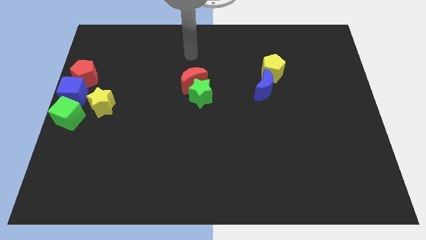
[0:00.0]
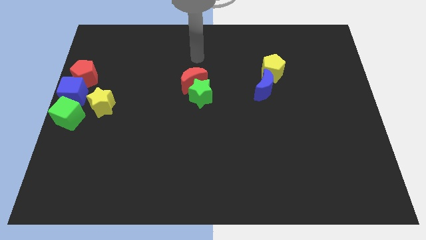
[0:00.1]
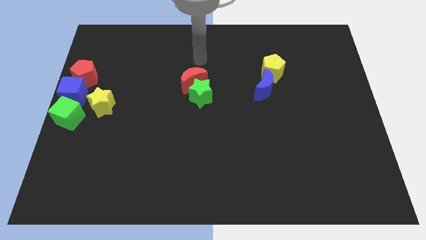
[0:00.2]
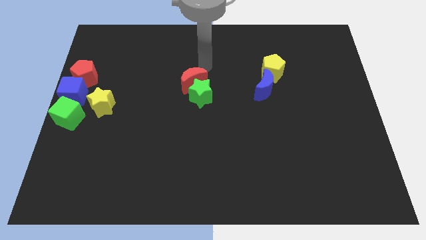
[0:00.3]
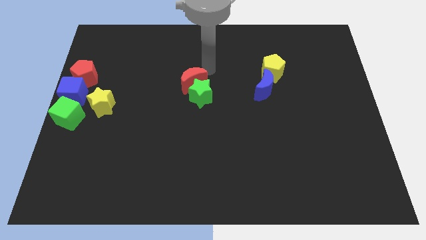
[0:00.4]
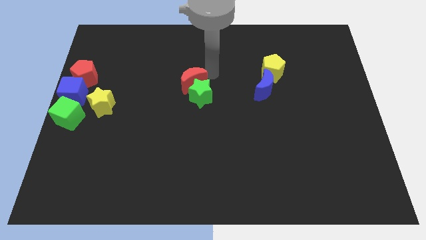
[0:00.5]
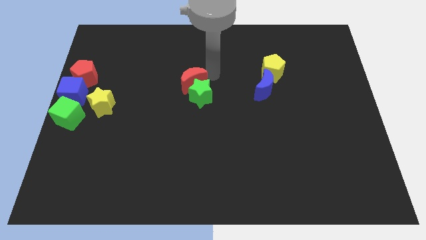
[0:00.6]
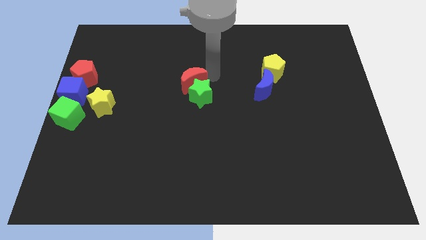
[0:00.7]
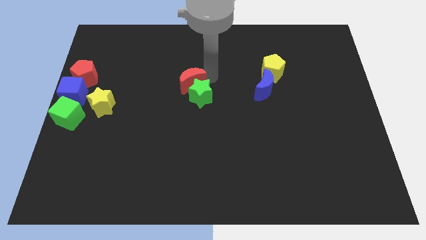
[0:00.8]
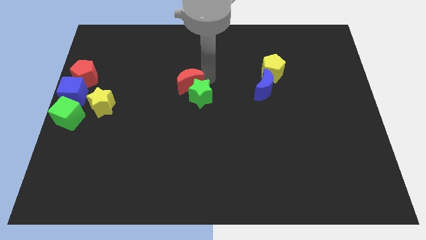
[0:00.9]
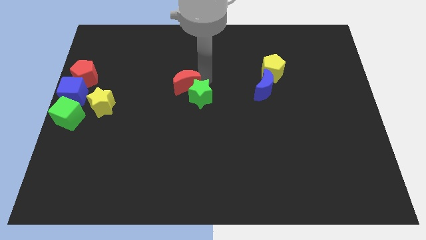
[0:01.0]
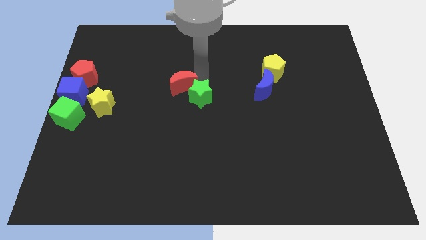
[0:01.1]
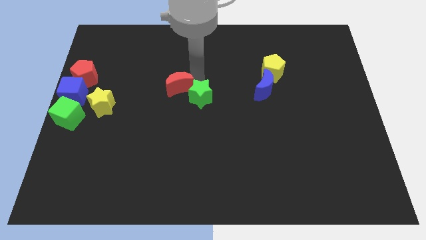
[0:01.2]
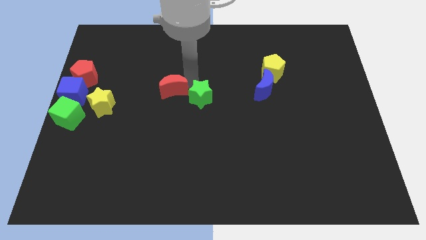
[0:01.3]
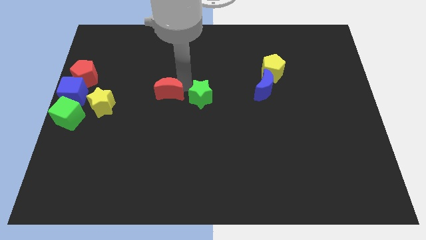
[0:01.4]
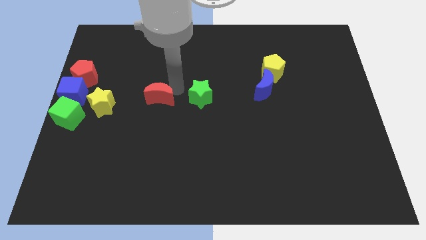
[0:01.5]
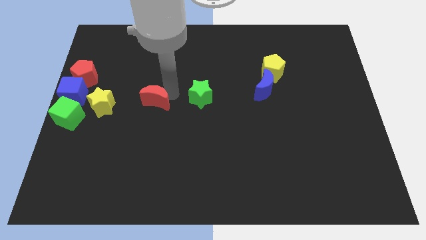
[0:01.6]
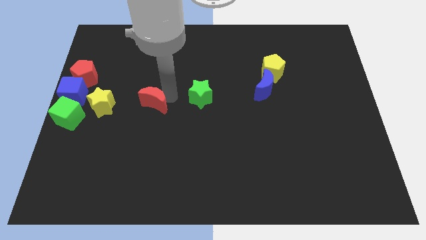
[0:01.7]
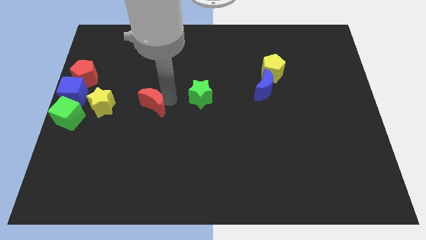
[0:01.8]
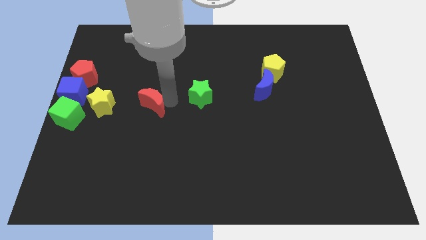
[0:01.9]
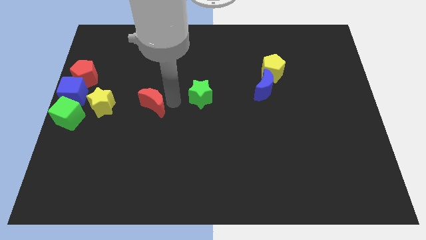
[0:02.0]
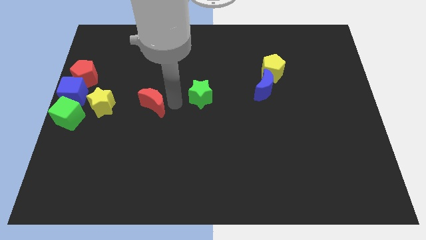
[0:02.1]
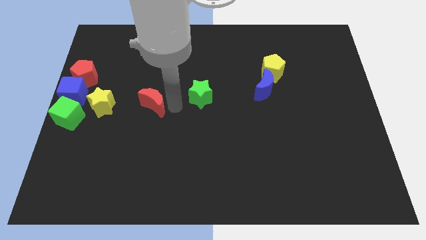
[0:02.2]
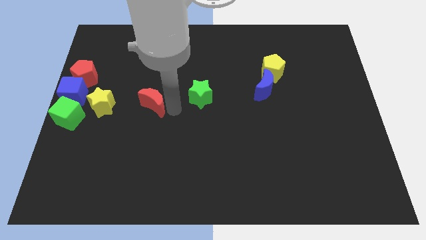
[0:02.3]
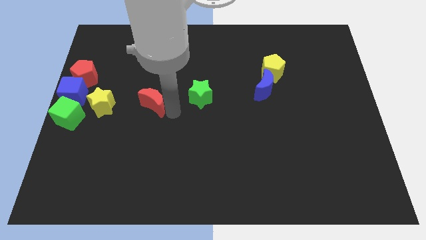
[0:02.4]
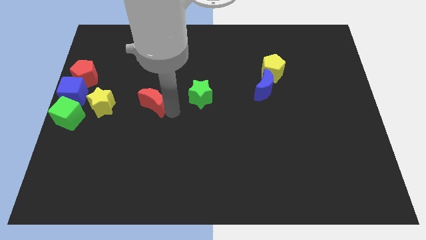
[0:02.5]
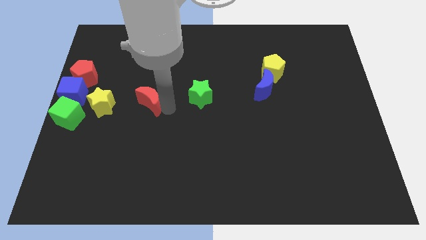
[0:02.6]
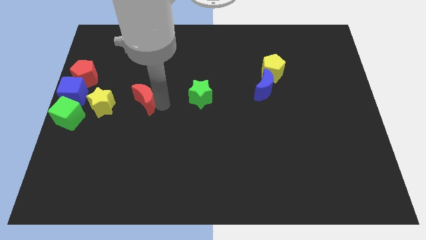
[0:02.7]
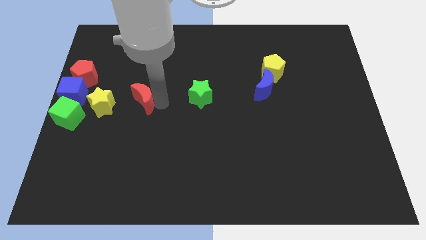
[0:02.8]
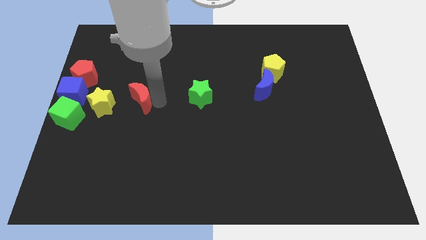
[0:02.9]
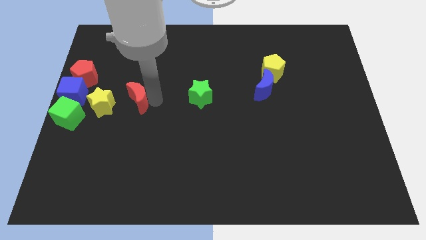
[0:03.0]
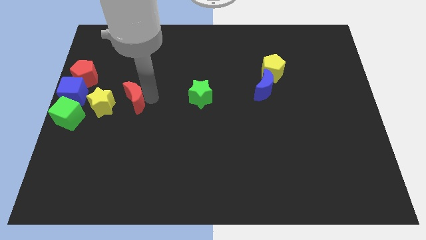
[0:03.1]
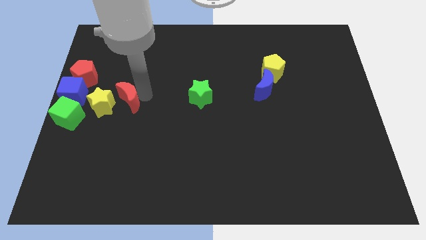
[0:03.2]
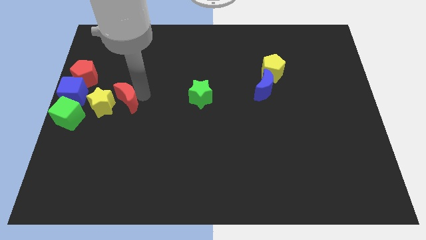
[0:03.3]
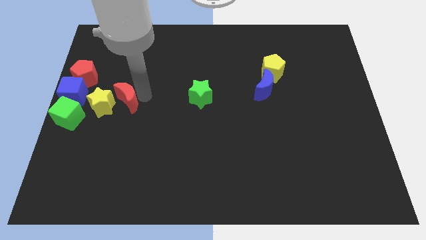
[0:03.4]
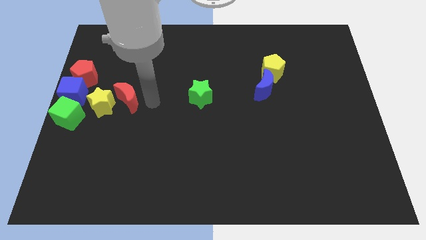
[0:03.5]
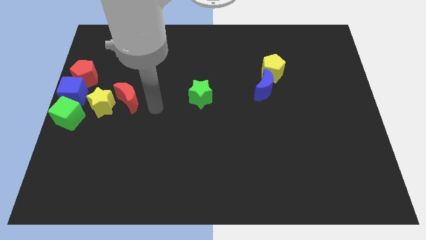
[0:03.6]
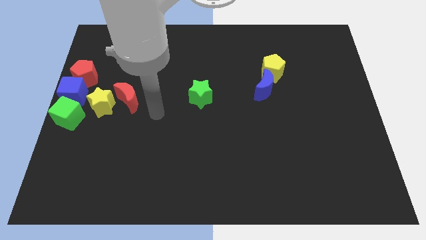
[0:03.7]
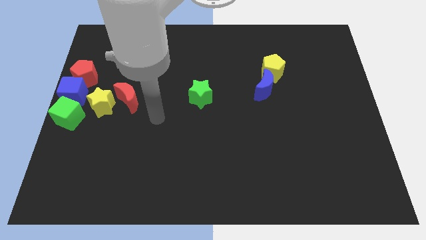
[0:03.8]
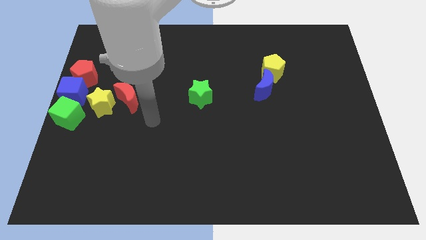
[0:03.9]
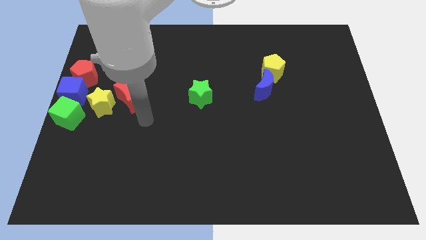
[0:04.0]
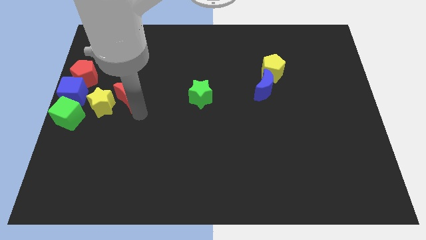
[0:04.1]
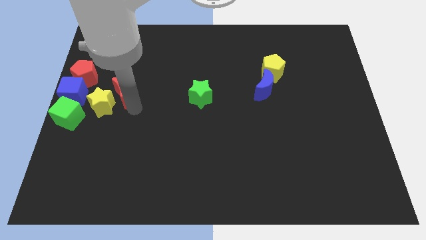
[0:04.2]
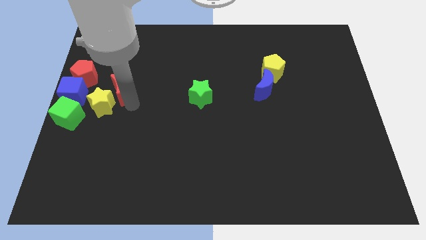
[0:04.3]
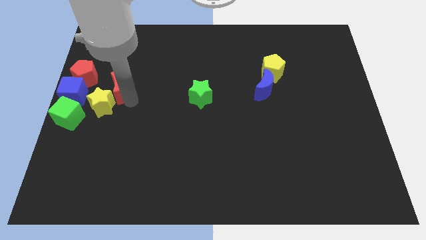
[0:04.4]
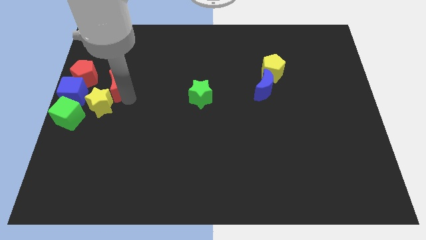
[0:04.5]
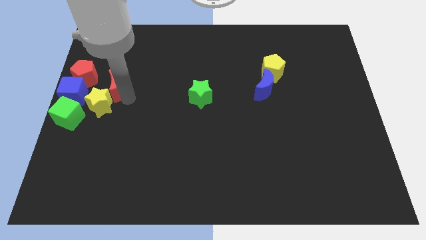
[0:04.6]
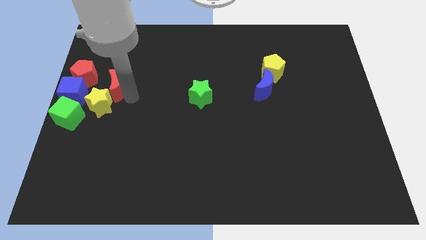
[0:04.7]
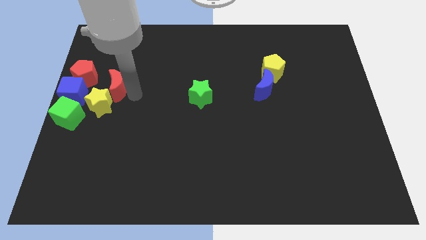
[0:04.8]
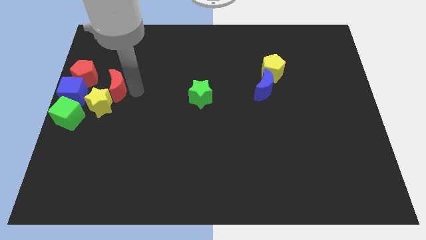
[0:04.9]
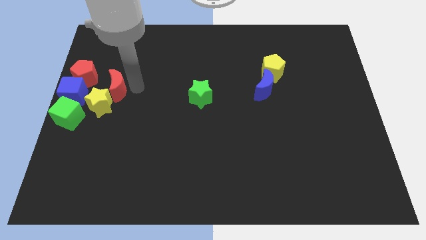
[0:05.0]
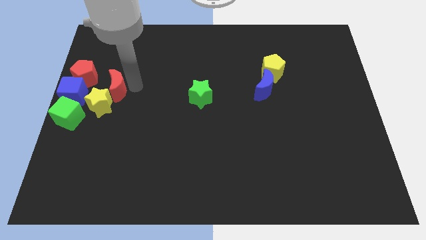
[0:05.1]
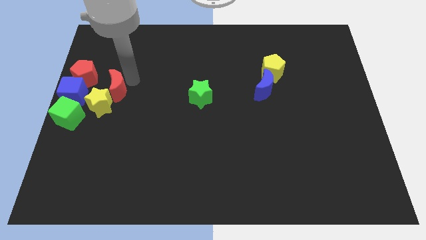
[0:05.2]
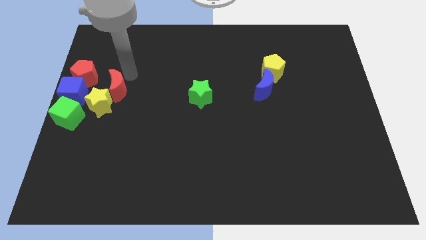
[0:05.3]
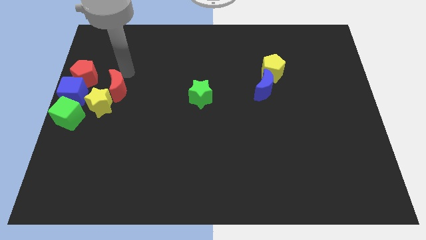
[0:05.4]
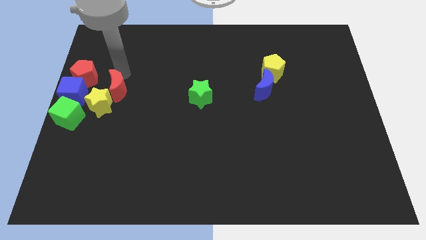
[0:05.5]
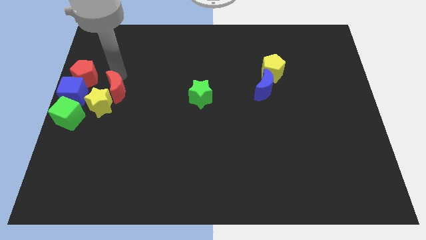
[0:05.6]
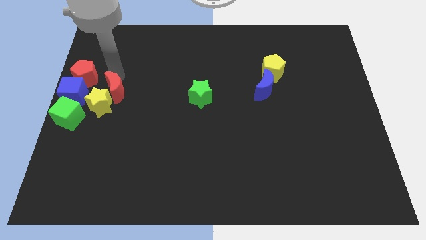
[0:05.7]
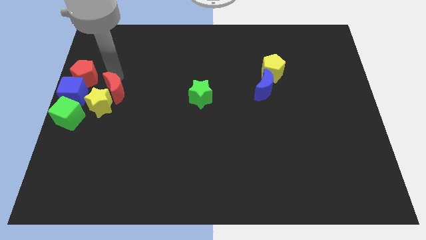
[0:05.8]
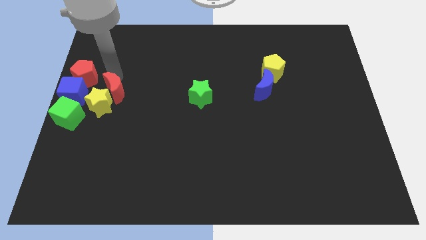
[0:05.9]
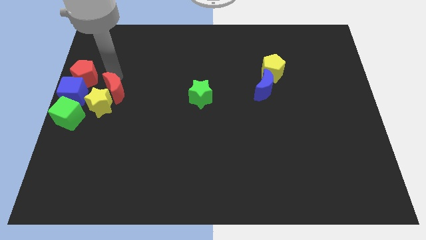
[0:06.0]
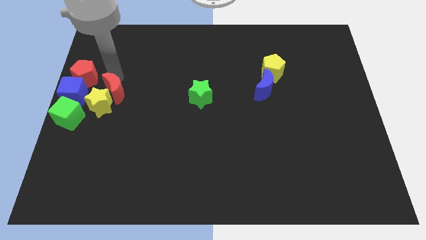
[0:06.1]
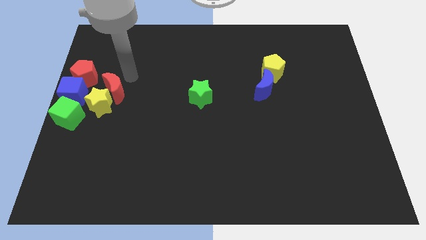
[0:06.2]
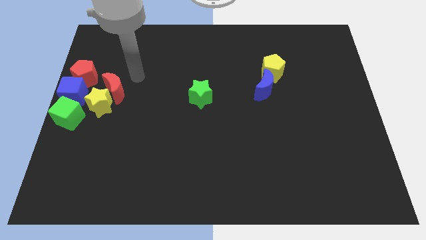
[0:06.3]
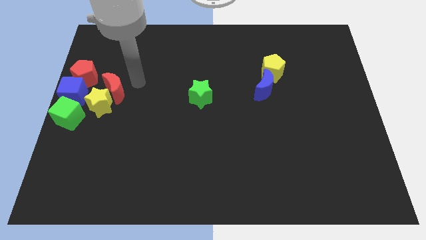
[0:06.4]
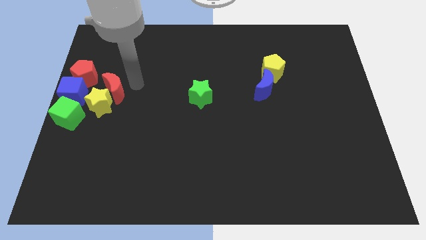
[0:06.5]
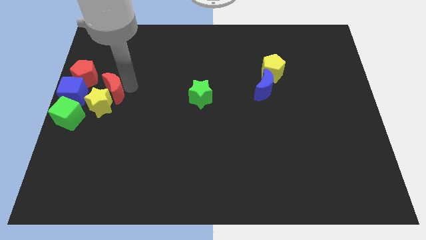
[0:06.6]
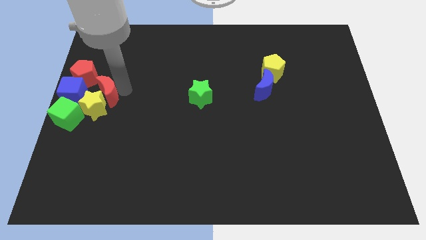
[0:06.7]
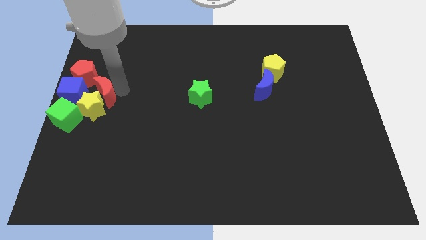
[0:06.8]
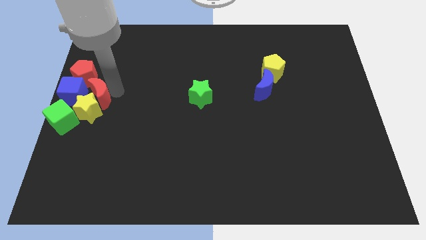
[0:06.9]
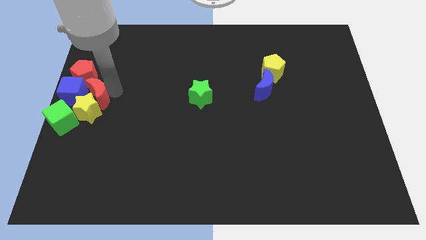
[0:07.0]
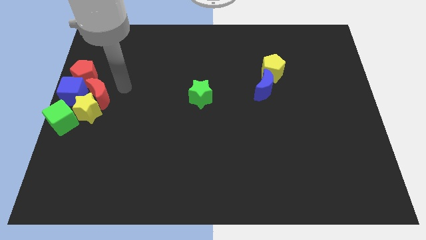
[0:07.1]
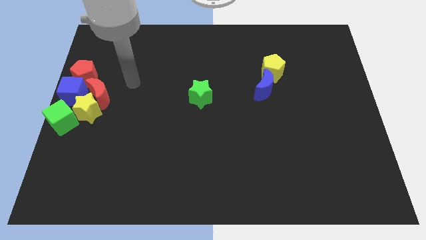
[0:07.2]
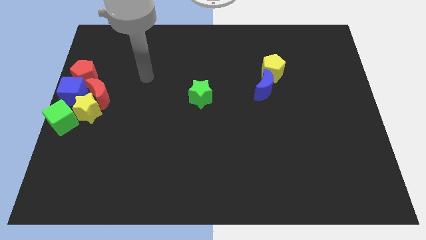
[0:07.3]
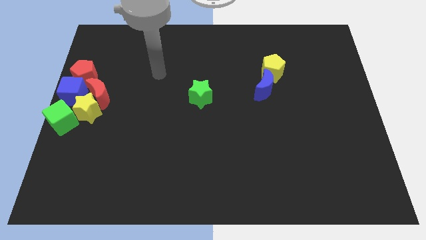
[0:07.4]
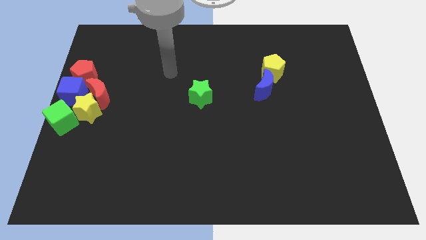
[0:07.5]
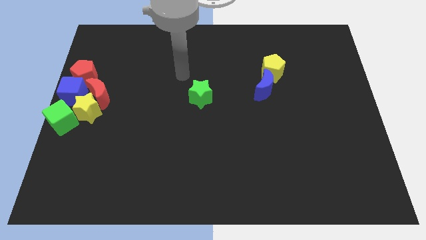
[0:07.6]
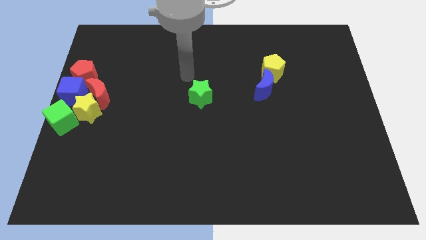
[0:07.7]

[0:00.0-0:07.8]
push the red moon into the group of blocks

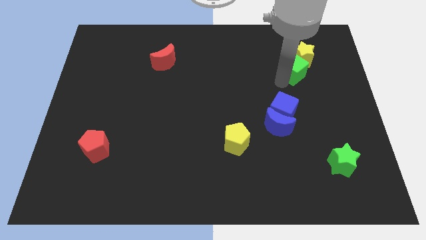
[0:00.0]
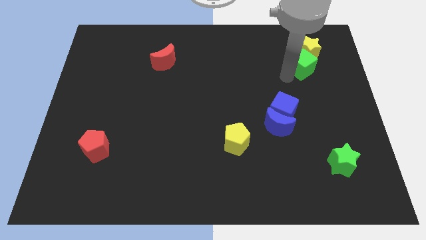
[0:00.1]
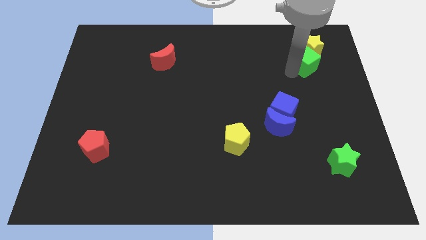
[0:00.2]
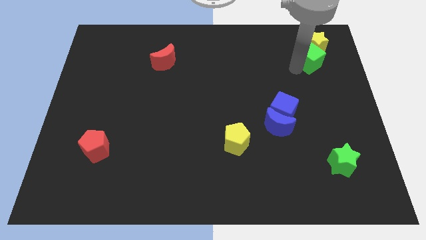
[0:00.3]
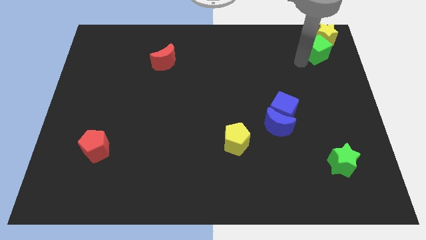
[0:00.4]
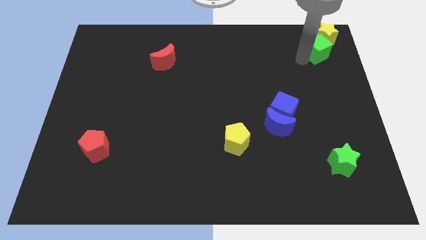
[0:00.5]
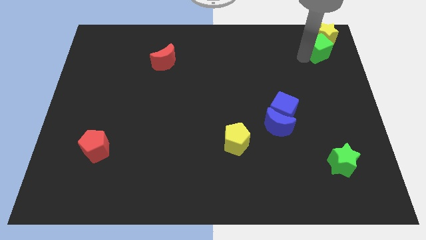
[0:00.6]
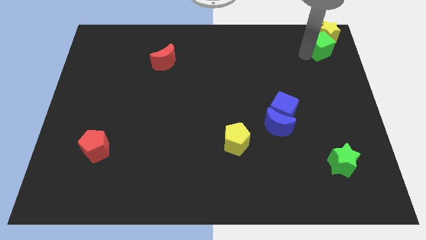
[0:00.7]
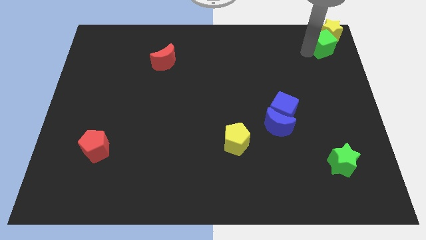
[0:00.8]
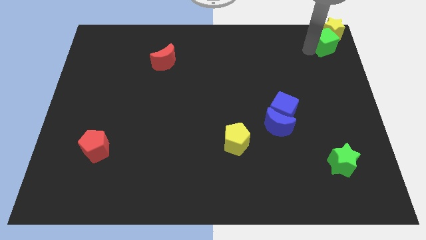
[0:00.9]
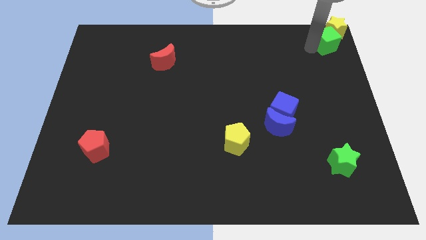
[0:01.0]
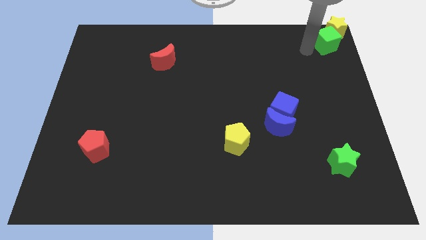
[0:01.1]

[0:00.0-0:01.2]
move the green cube along with the yellow star to the top right corner of the board
